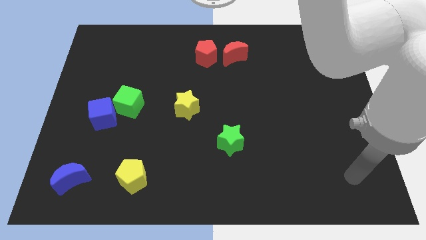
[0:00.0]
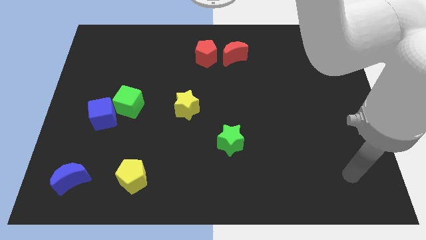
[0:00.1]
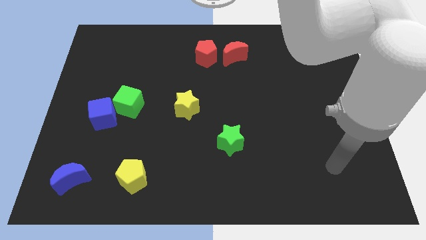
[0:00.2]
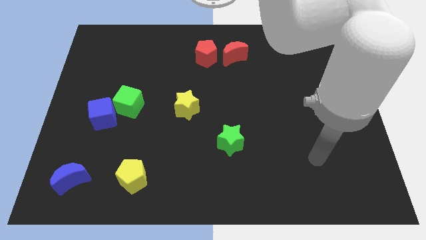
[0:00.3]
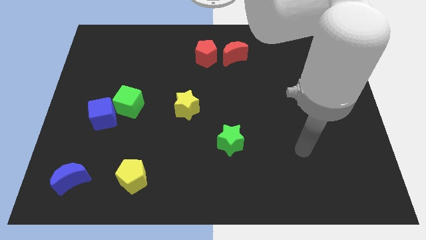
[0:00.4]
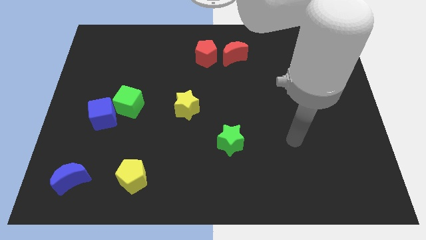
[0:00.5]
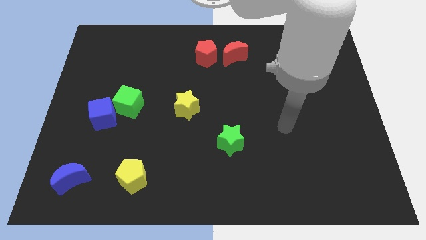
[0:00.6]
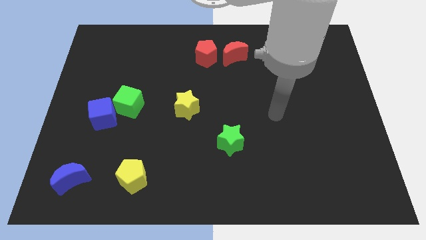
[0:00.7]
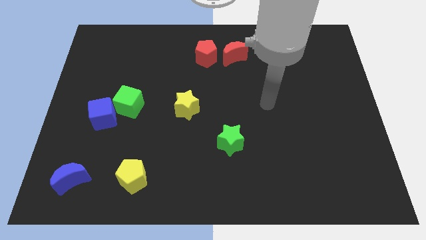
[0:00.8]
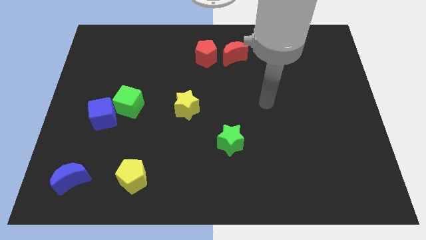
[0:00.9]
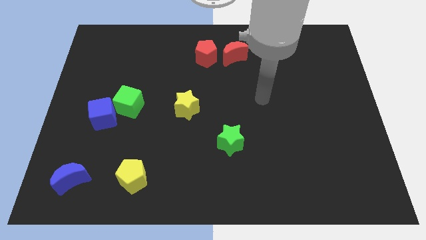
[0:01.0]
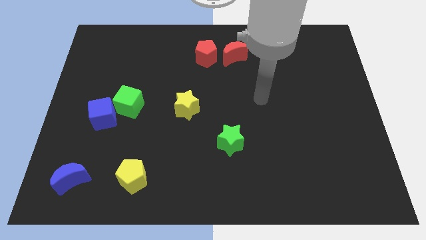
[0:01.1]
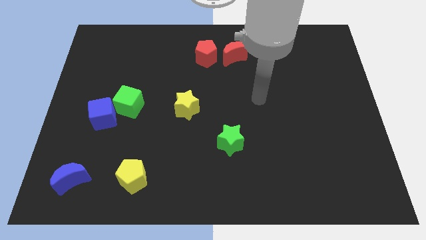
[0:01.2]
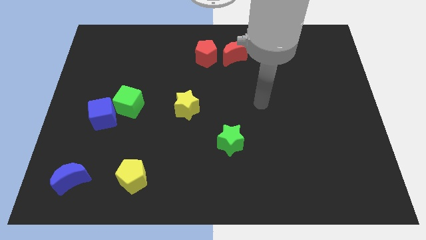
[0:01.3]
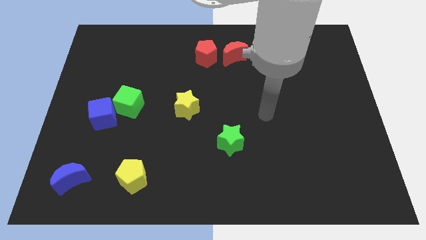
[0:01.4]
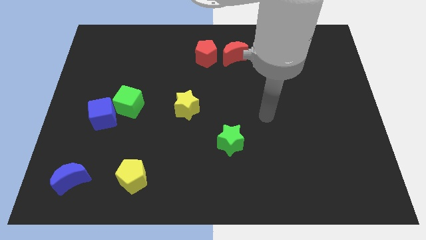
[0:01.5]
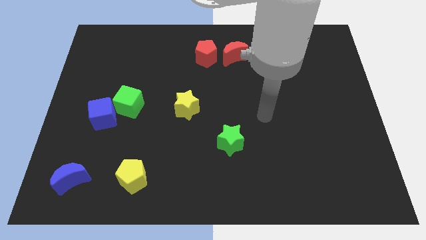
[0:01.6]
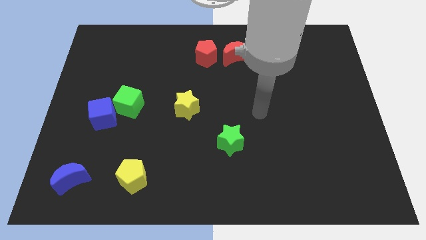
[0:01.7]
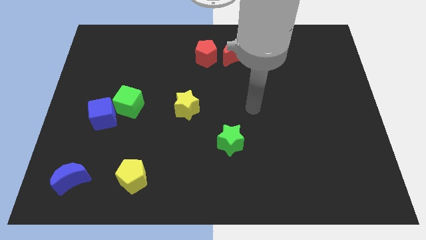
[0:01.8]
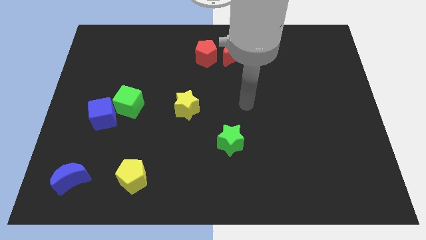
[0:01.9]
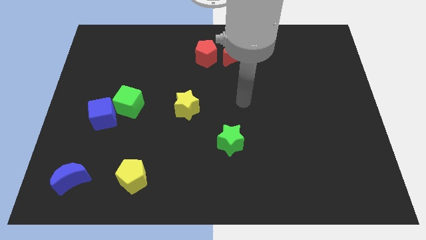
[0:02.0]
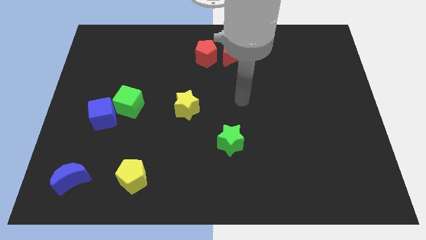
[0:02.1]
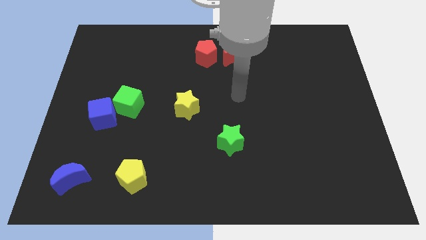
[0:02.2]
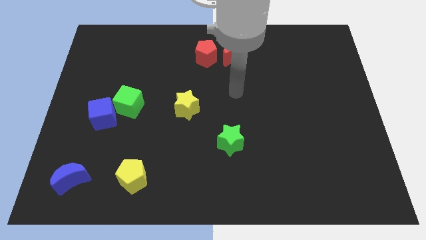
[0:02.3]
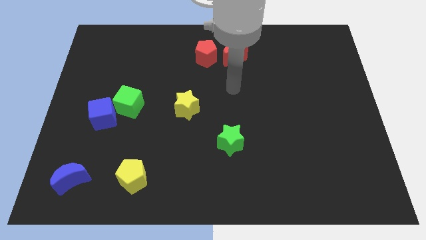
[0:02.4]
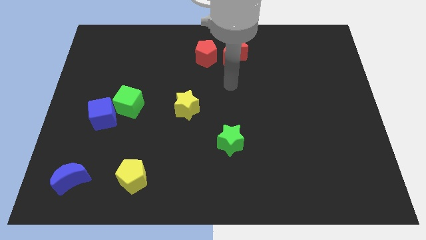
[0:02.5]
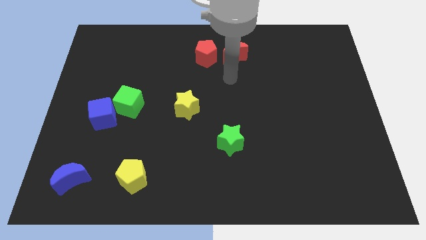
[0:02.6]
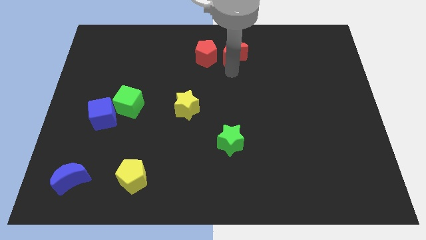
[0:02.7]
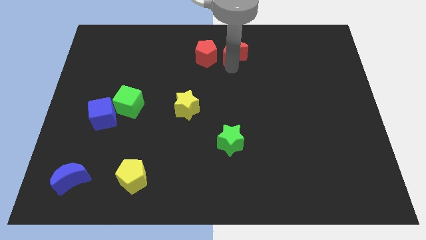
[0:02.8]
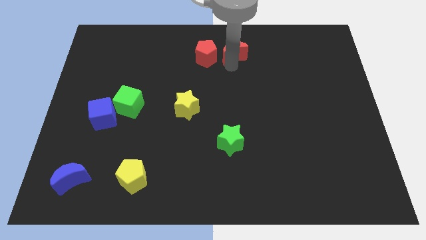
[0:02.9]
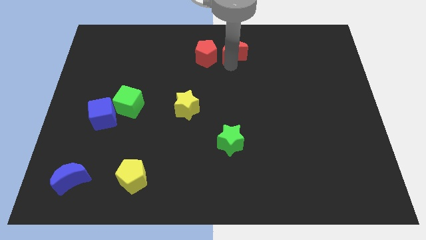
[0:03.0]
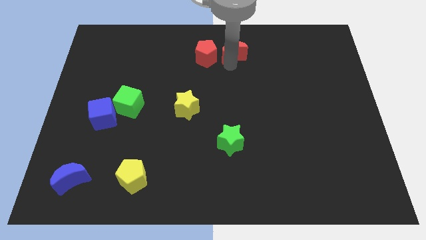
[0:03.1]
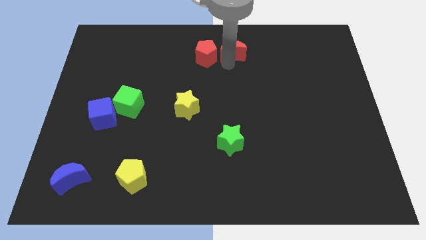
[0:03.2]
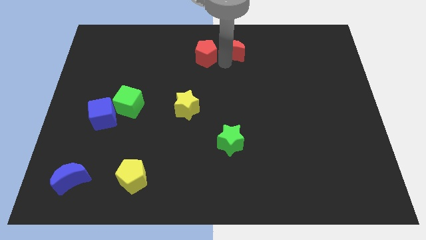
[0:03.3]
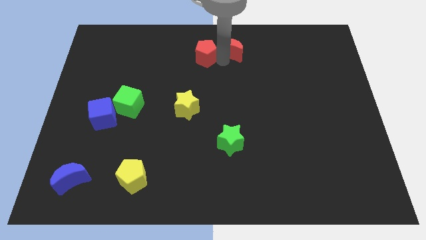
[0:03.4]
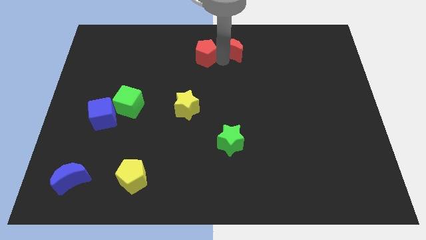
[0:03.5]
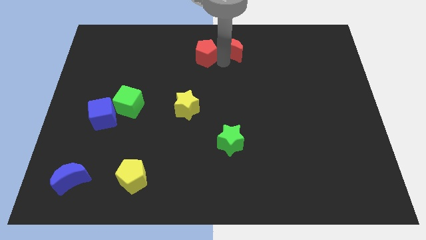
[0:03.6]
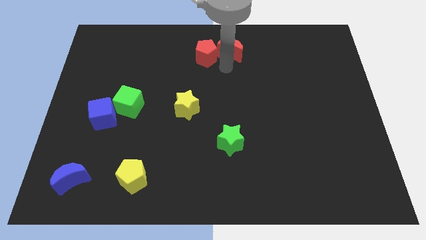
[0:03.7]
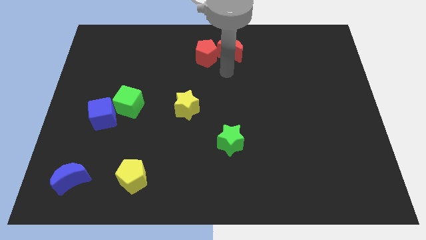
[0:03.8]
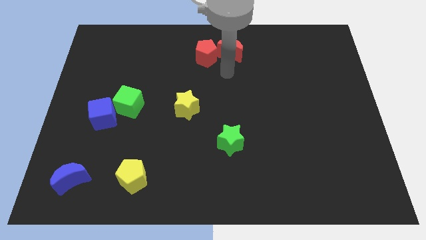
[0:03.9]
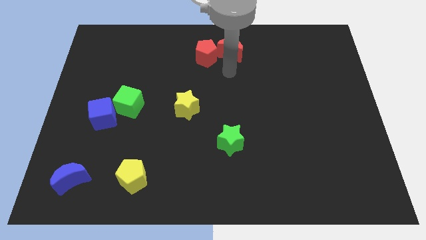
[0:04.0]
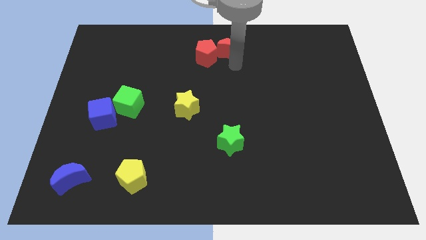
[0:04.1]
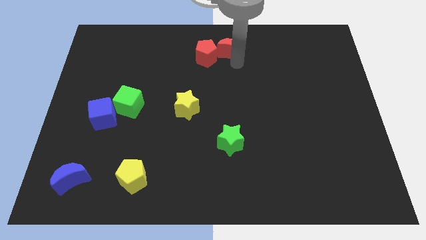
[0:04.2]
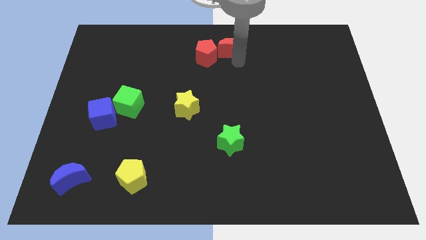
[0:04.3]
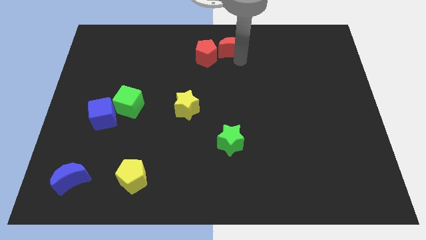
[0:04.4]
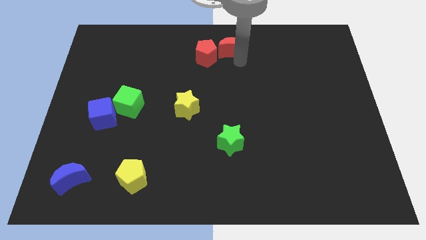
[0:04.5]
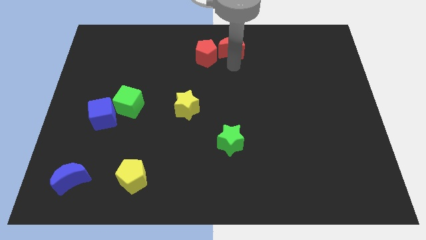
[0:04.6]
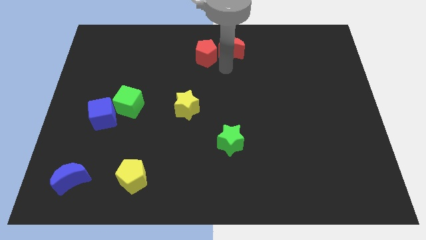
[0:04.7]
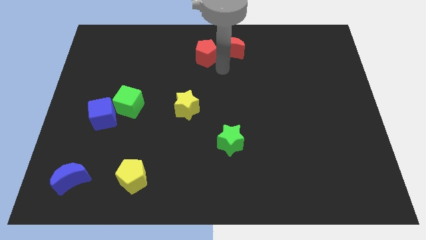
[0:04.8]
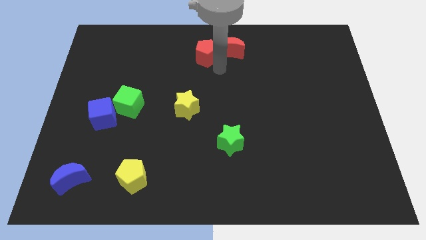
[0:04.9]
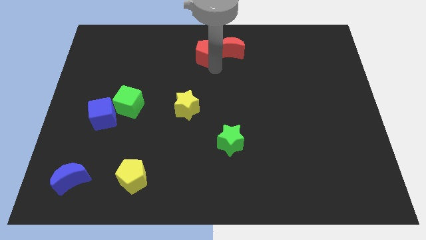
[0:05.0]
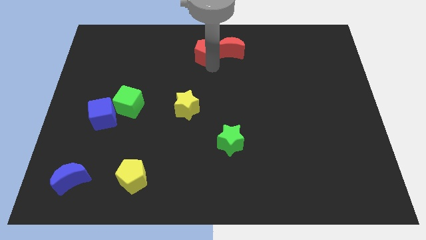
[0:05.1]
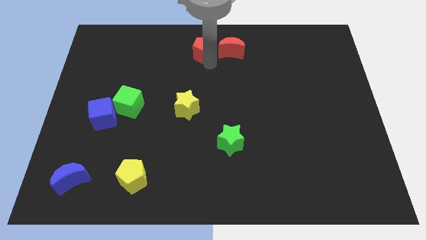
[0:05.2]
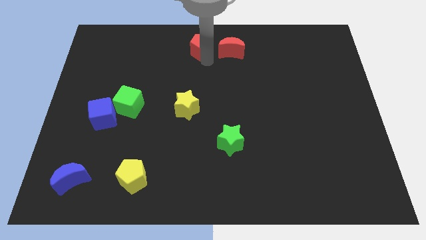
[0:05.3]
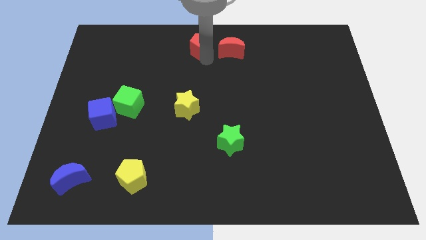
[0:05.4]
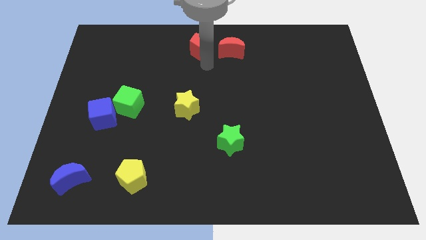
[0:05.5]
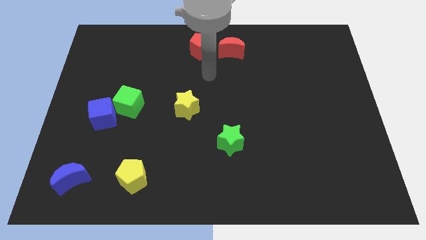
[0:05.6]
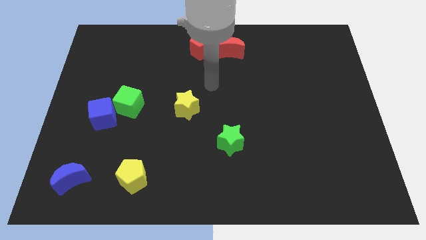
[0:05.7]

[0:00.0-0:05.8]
push the red blocks slightly up

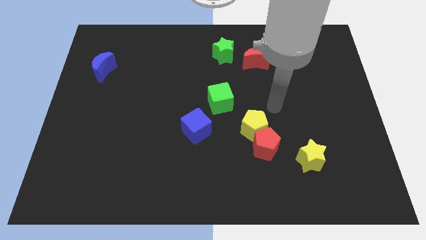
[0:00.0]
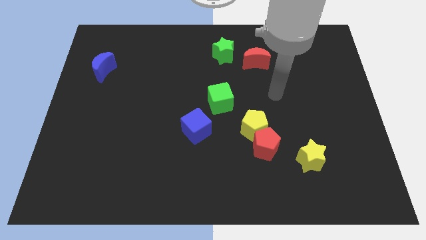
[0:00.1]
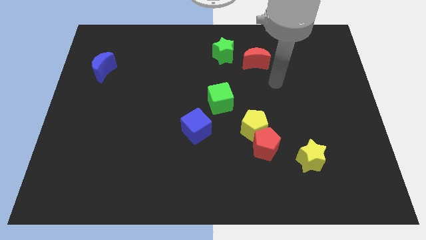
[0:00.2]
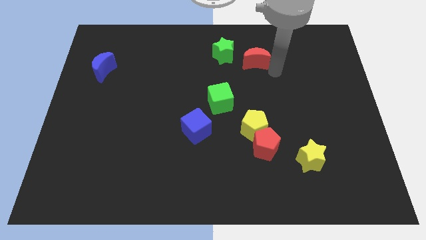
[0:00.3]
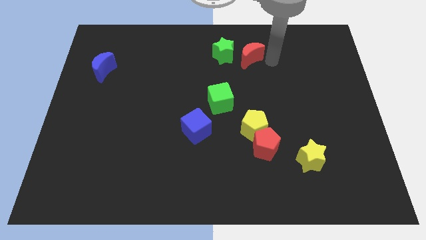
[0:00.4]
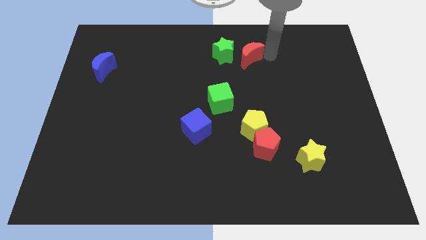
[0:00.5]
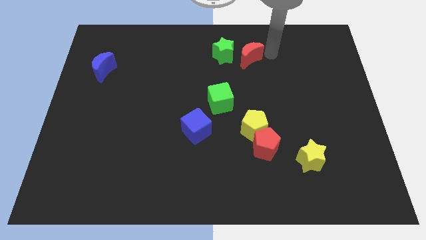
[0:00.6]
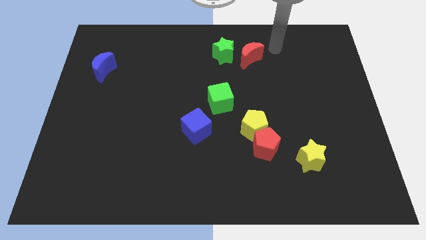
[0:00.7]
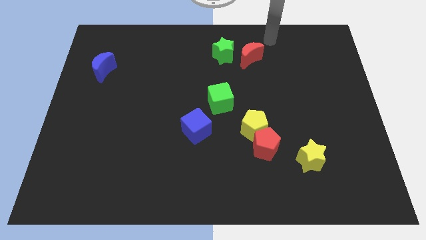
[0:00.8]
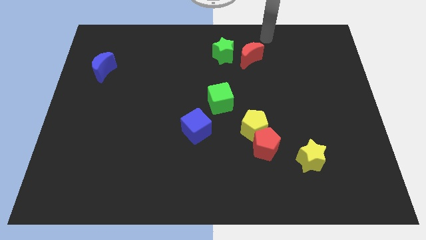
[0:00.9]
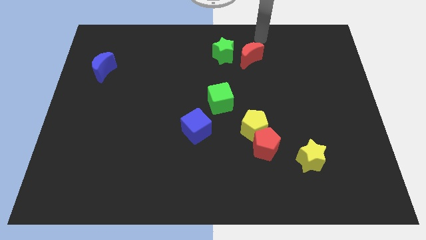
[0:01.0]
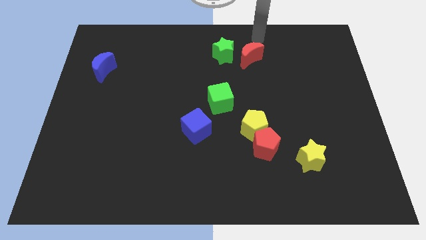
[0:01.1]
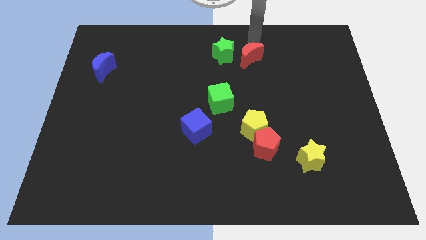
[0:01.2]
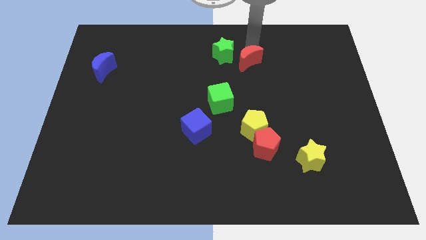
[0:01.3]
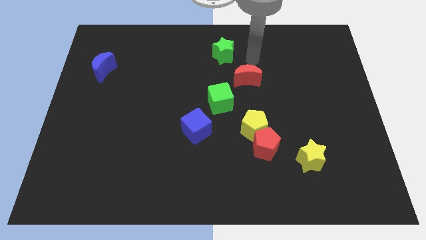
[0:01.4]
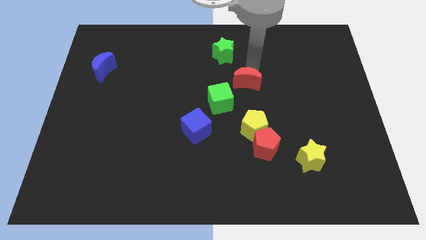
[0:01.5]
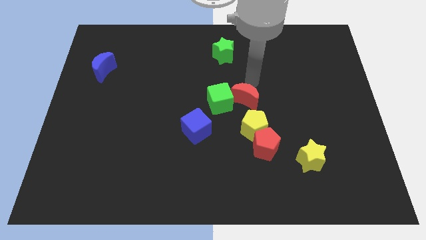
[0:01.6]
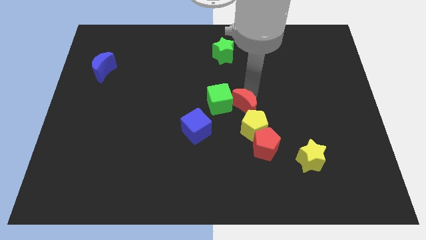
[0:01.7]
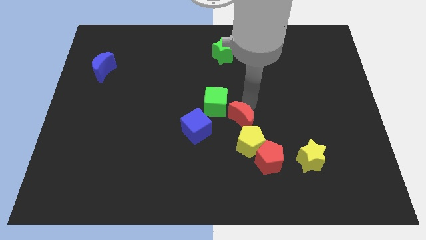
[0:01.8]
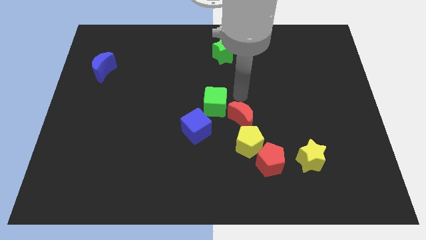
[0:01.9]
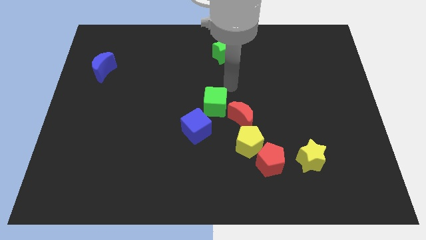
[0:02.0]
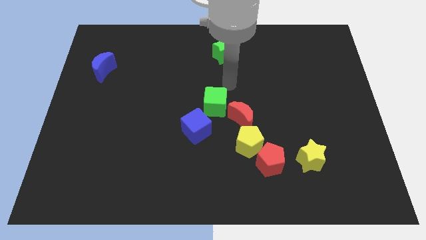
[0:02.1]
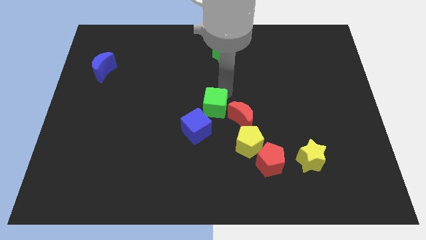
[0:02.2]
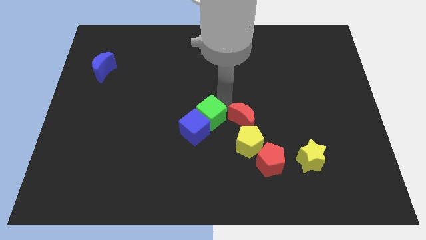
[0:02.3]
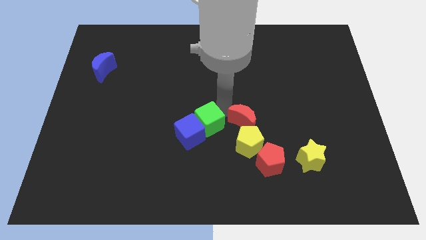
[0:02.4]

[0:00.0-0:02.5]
push the red crescent close to the yellow pentagon and green cube

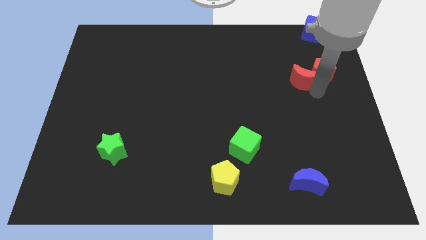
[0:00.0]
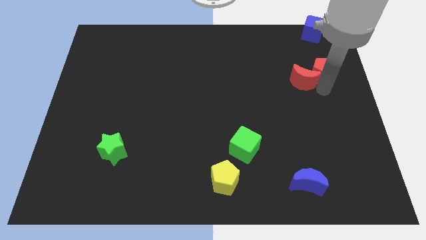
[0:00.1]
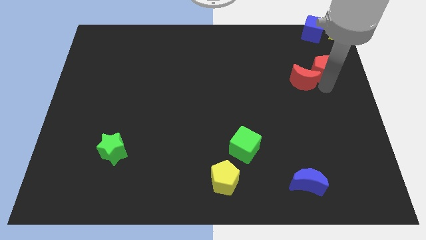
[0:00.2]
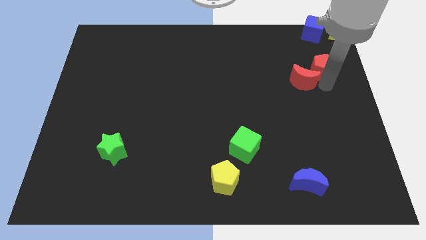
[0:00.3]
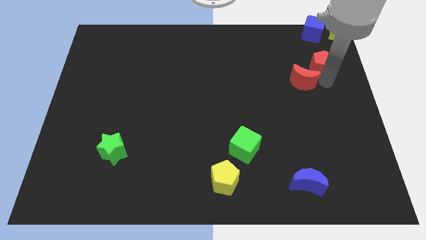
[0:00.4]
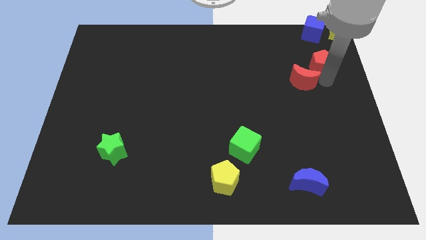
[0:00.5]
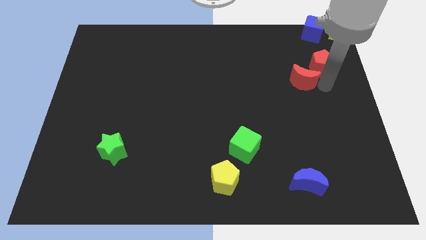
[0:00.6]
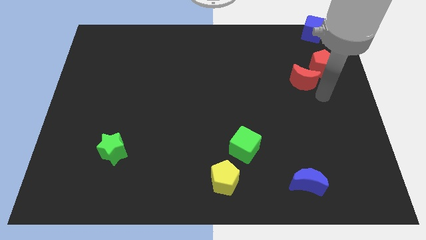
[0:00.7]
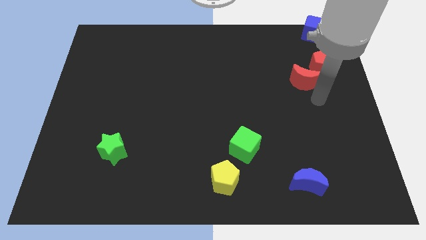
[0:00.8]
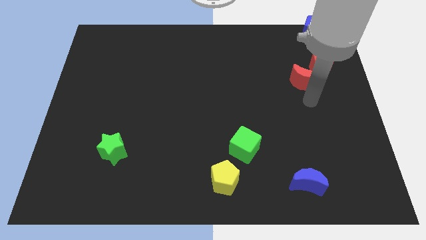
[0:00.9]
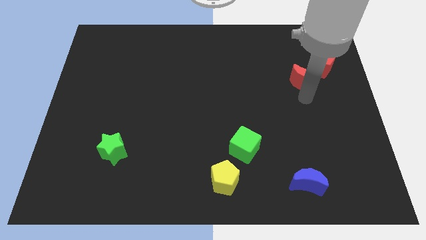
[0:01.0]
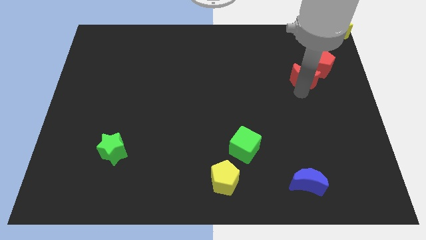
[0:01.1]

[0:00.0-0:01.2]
slightly move red pentagon
